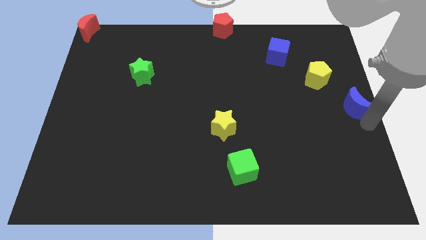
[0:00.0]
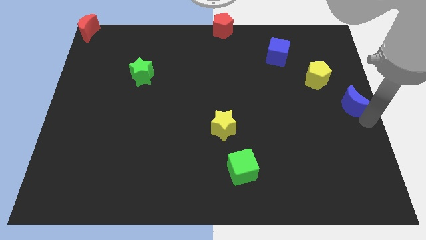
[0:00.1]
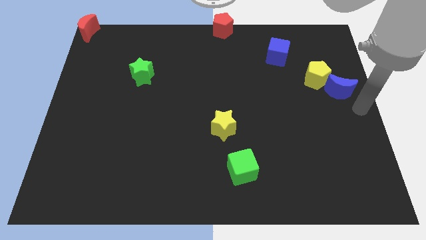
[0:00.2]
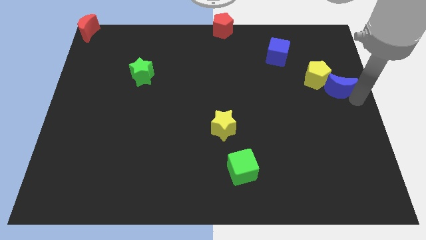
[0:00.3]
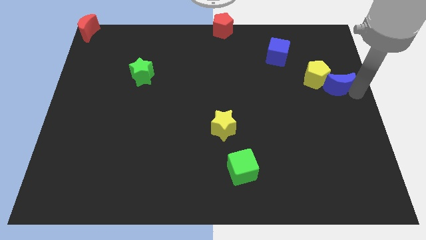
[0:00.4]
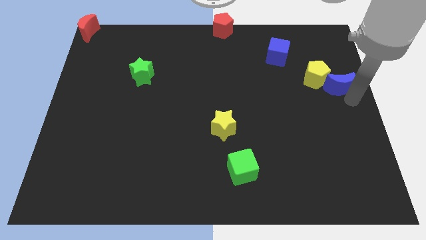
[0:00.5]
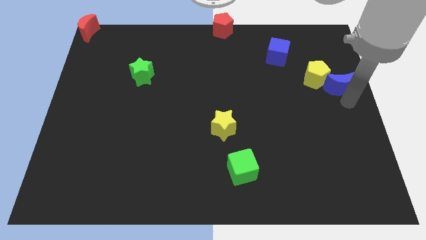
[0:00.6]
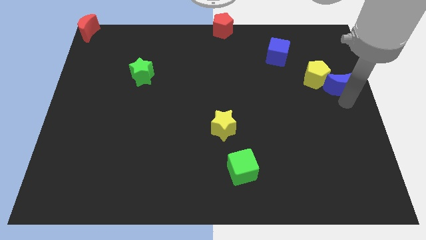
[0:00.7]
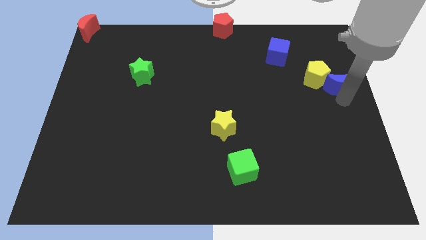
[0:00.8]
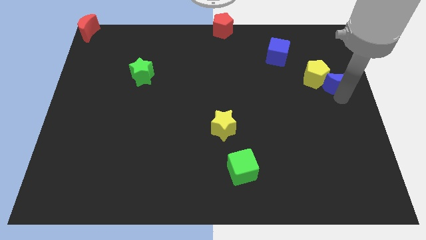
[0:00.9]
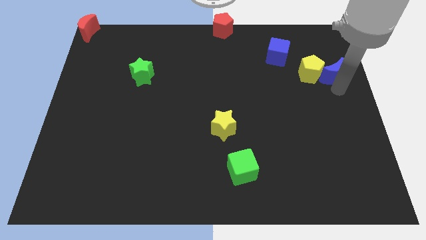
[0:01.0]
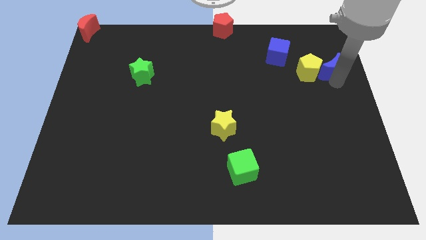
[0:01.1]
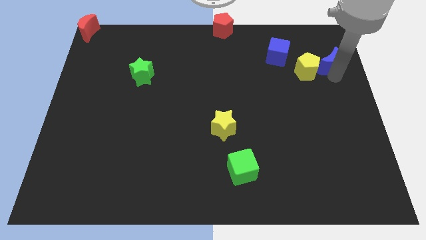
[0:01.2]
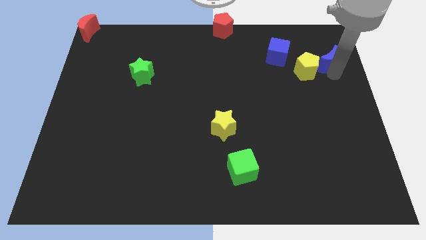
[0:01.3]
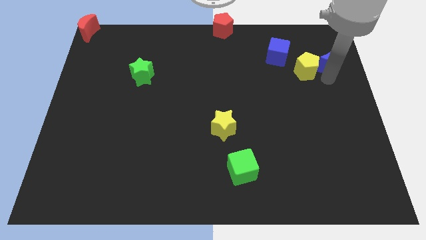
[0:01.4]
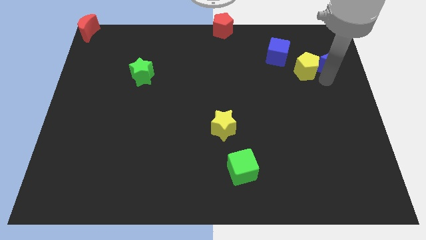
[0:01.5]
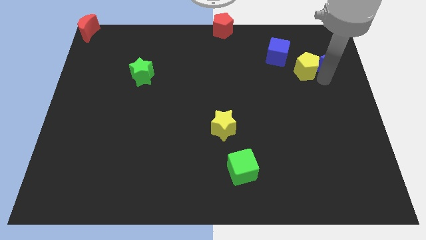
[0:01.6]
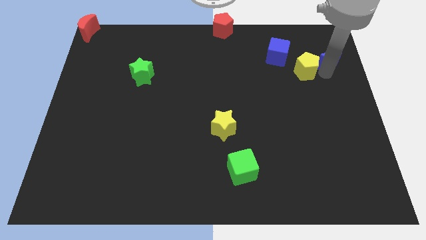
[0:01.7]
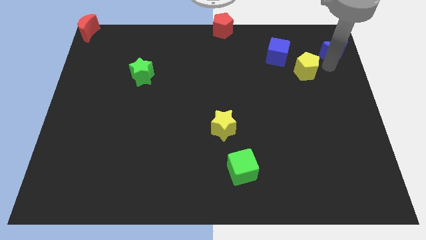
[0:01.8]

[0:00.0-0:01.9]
place the blue crescent to the right of yellow pentagon

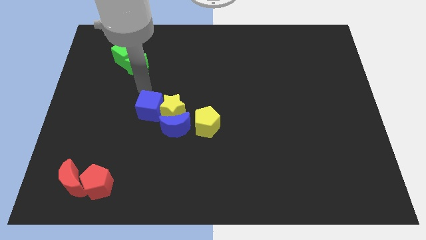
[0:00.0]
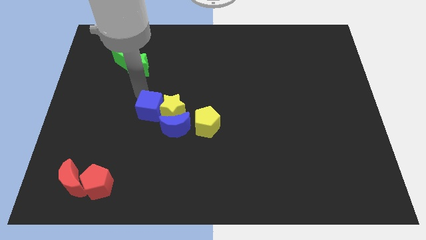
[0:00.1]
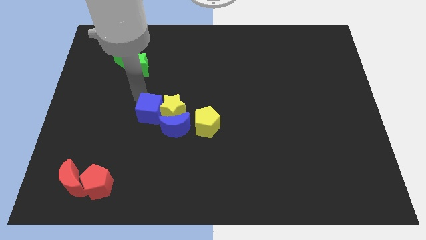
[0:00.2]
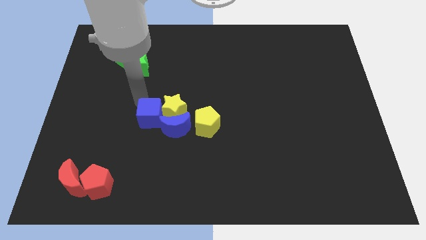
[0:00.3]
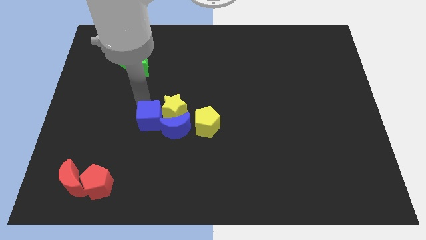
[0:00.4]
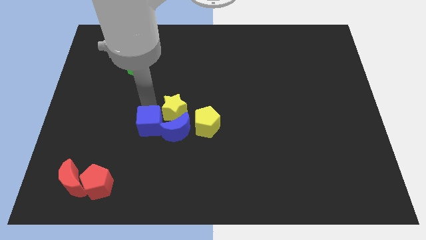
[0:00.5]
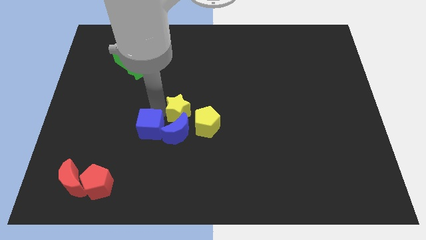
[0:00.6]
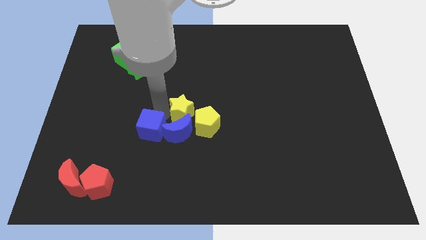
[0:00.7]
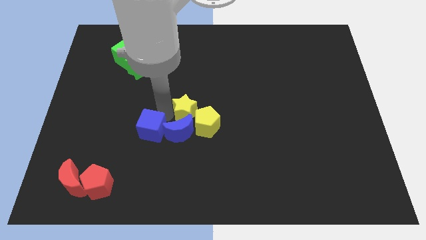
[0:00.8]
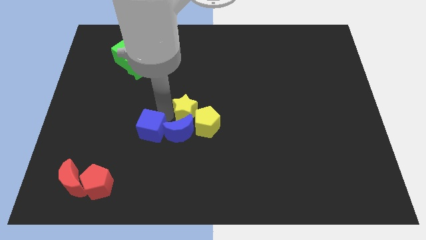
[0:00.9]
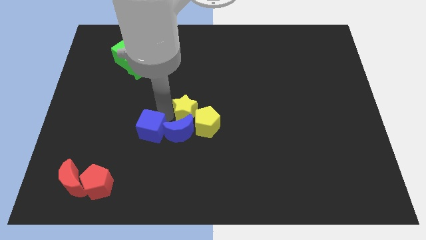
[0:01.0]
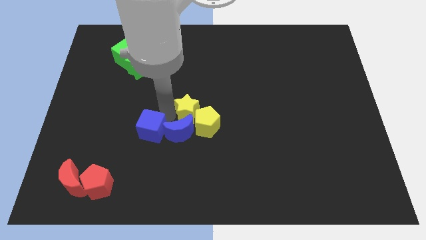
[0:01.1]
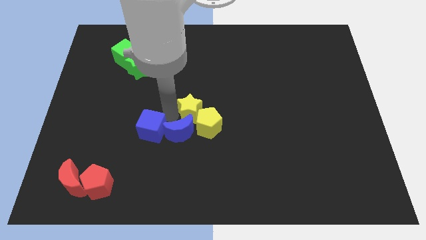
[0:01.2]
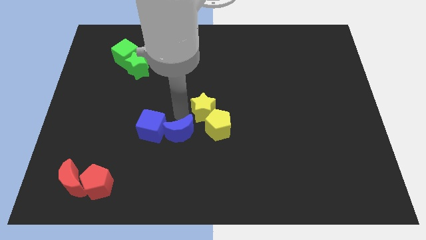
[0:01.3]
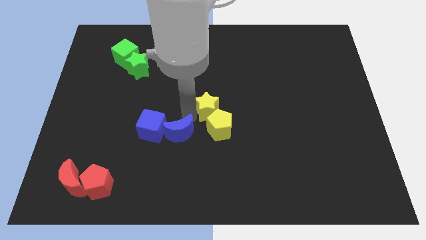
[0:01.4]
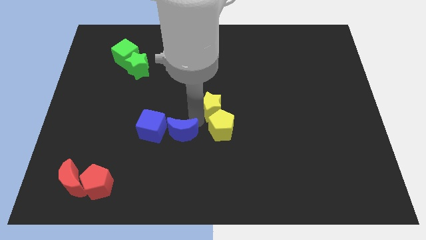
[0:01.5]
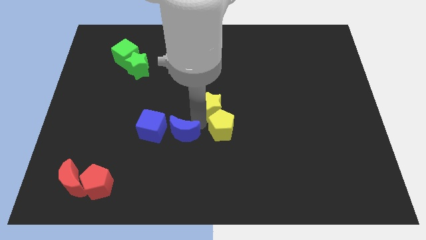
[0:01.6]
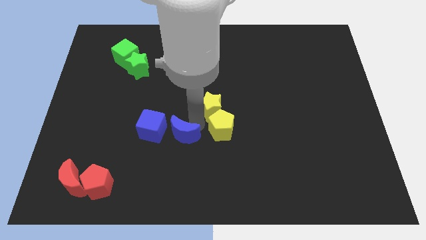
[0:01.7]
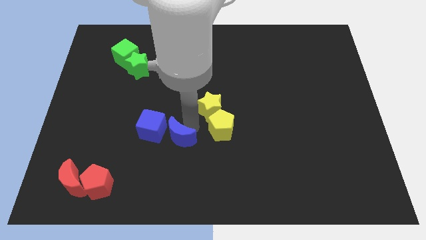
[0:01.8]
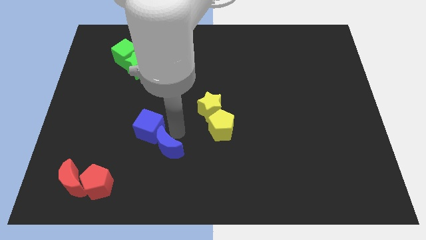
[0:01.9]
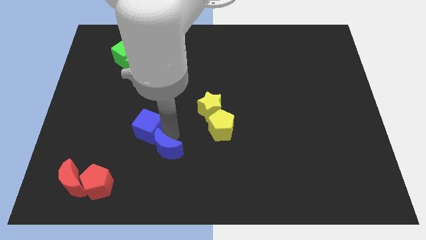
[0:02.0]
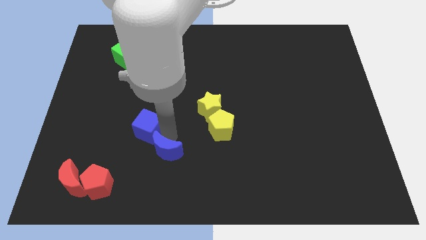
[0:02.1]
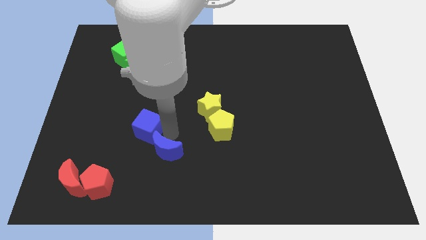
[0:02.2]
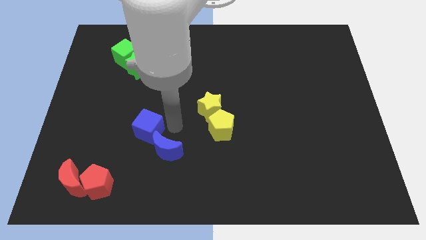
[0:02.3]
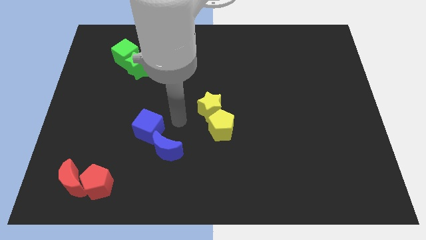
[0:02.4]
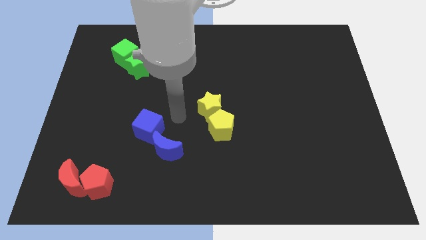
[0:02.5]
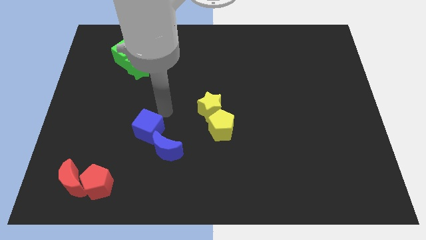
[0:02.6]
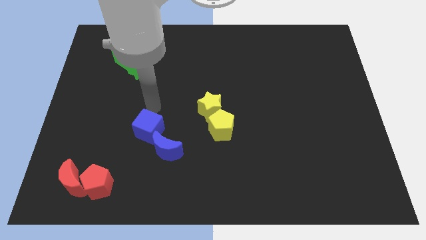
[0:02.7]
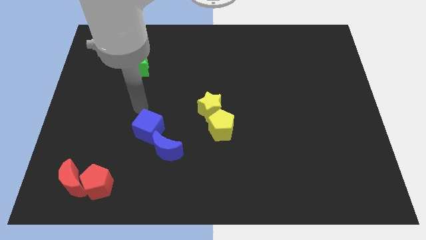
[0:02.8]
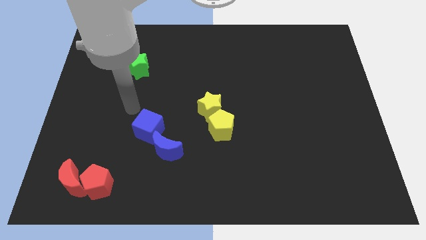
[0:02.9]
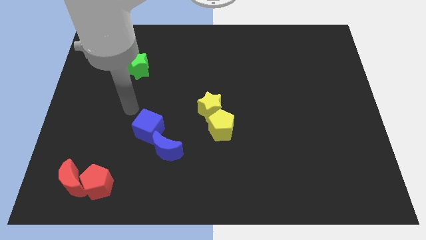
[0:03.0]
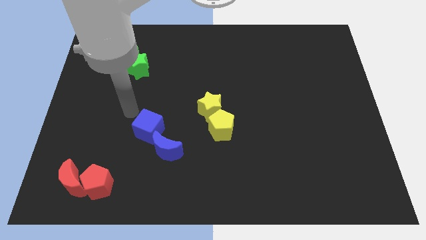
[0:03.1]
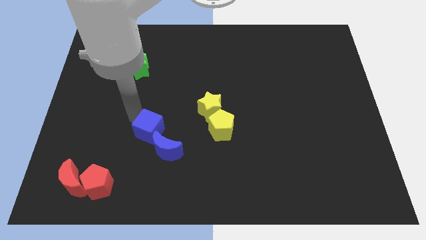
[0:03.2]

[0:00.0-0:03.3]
separate blue blocks from yellow blocks

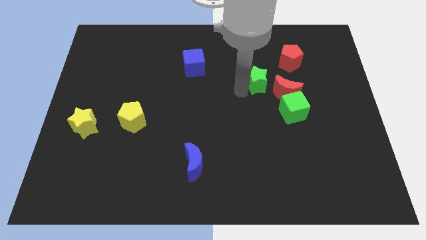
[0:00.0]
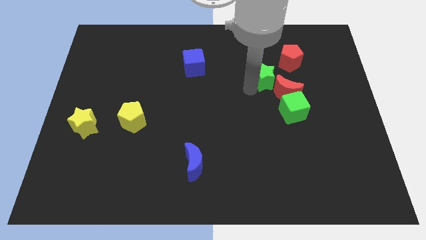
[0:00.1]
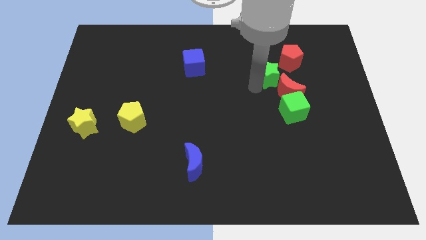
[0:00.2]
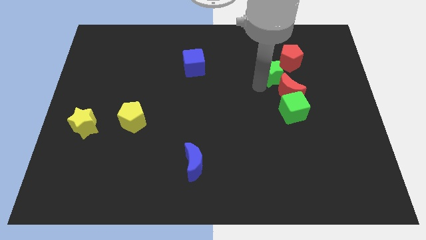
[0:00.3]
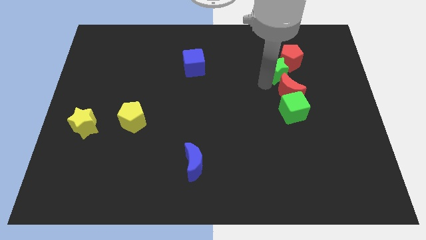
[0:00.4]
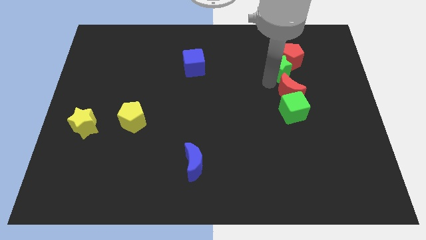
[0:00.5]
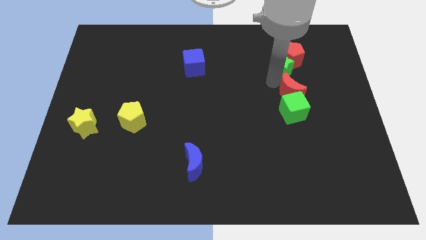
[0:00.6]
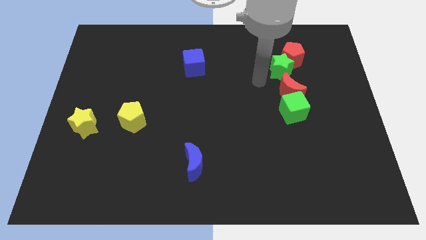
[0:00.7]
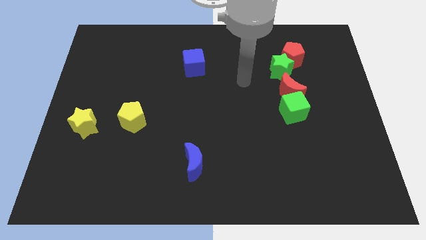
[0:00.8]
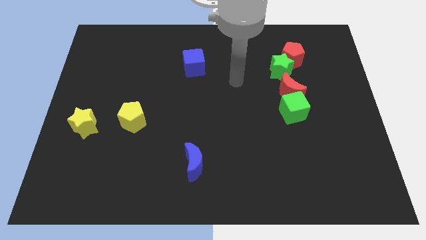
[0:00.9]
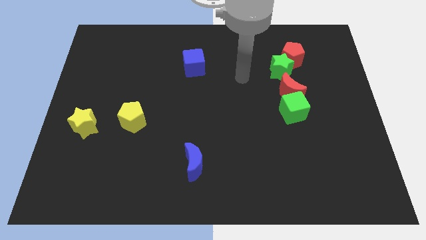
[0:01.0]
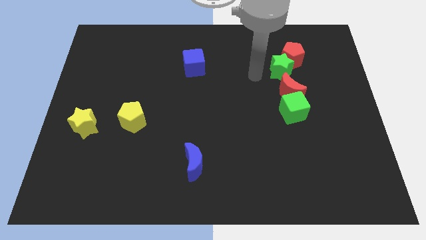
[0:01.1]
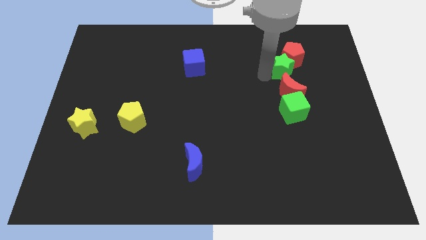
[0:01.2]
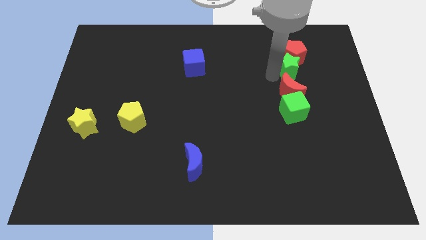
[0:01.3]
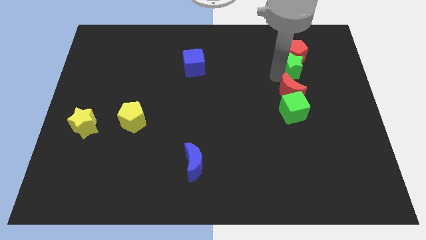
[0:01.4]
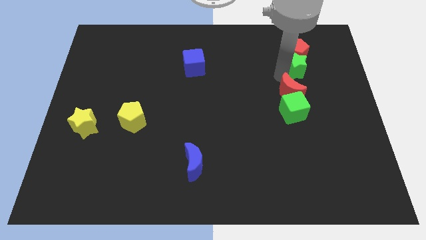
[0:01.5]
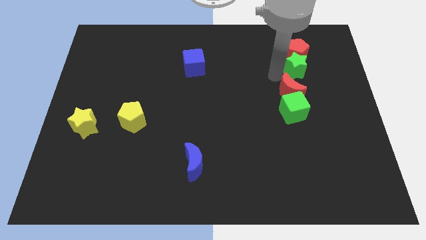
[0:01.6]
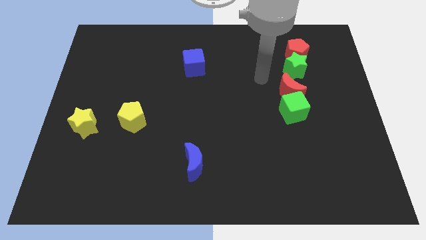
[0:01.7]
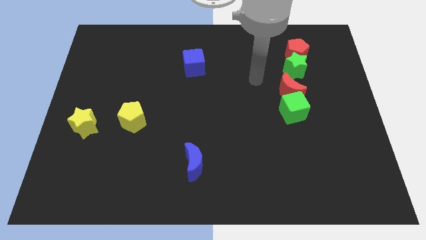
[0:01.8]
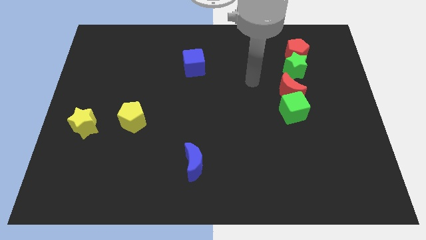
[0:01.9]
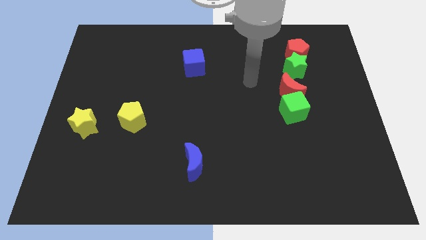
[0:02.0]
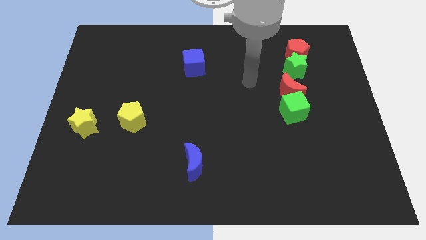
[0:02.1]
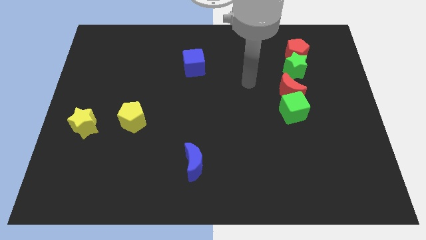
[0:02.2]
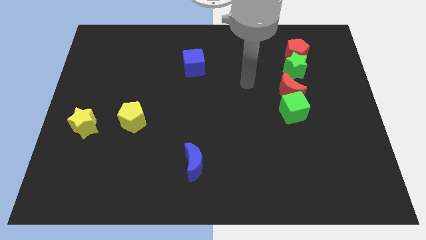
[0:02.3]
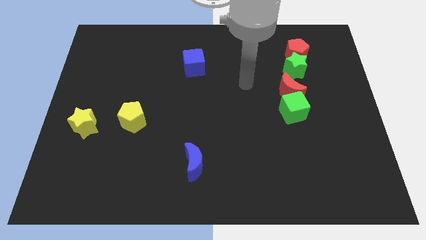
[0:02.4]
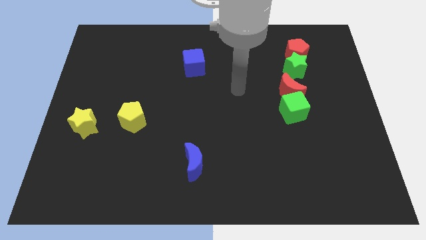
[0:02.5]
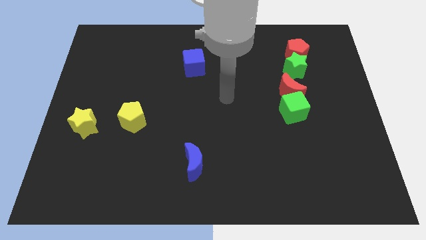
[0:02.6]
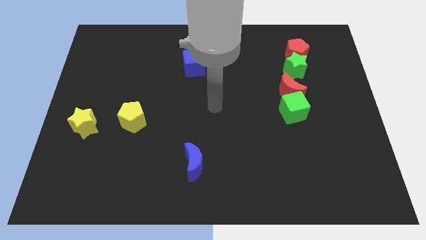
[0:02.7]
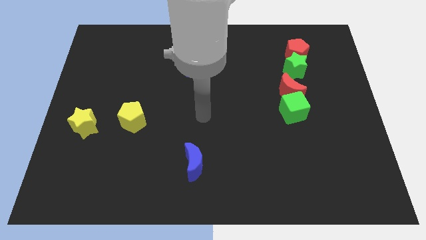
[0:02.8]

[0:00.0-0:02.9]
place the green star below the red pentagon

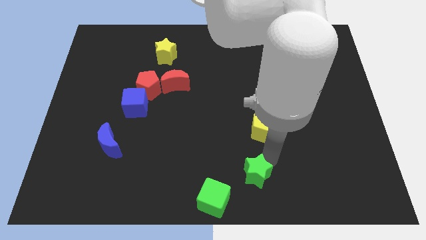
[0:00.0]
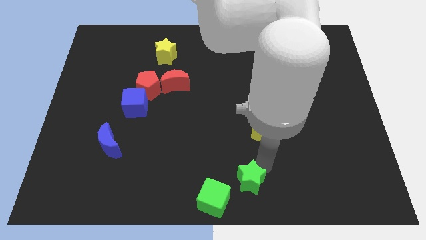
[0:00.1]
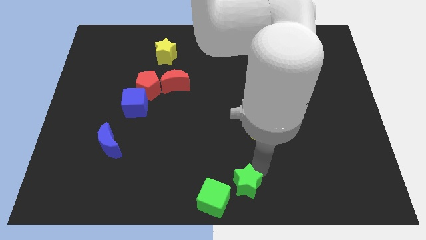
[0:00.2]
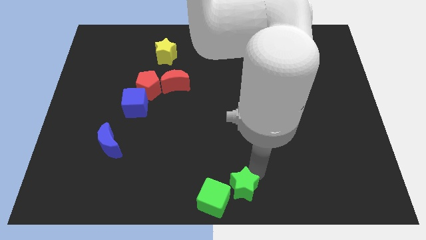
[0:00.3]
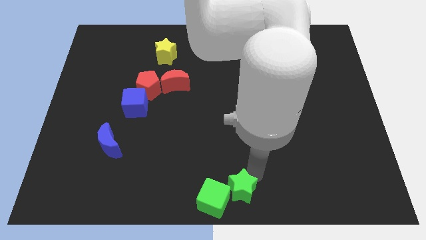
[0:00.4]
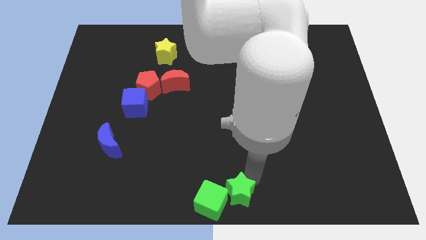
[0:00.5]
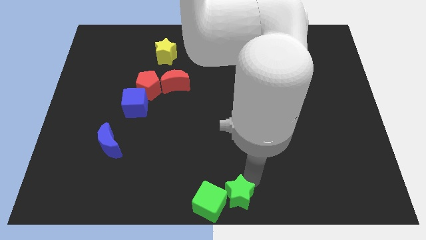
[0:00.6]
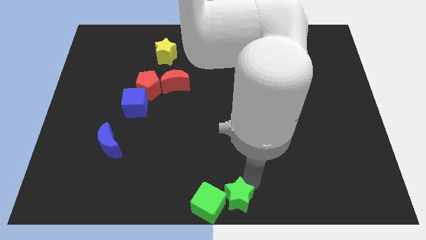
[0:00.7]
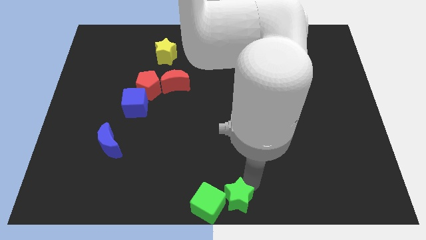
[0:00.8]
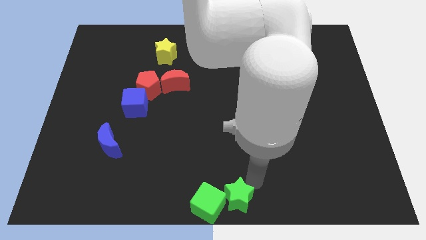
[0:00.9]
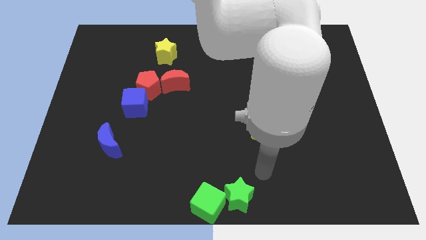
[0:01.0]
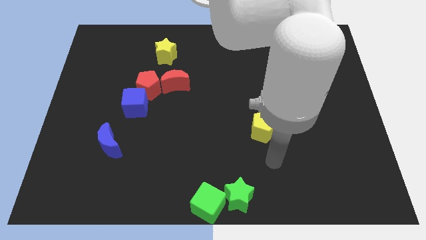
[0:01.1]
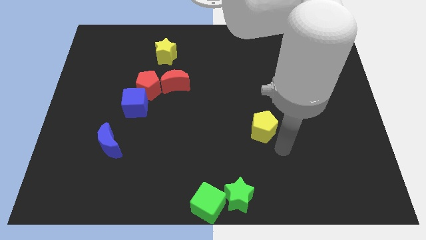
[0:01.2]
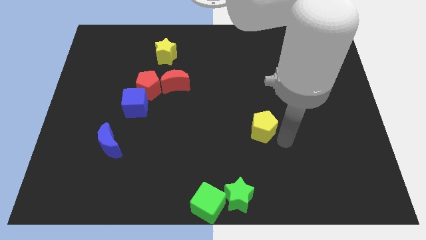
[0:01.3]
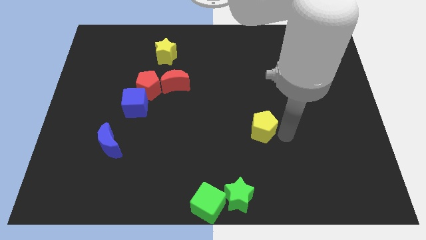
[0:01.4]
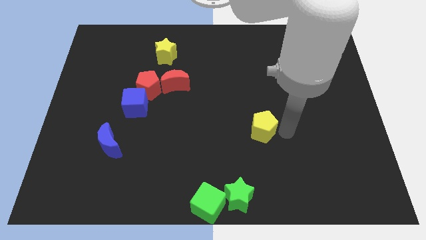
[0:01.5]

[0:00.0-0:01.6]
push the green star into the green cube
